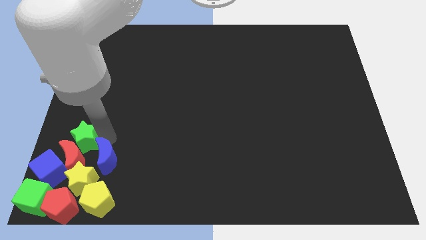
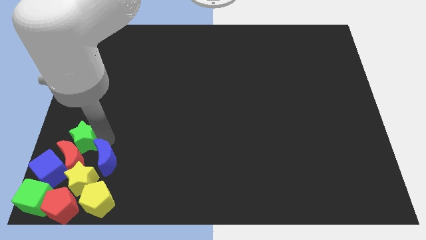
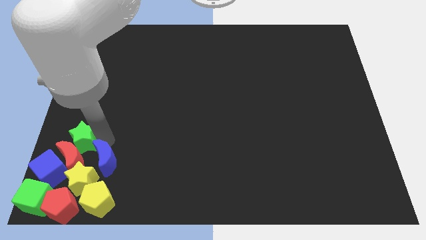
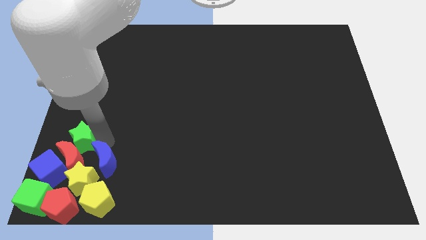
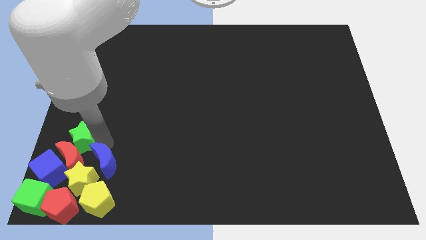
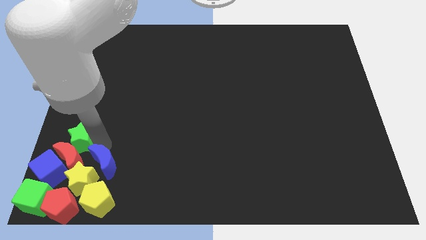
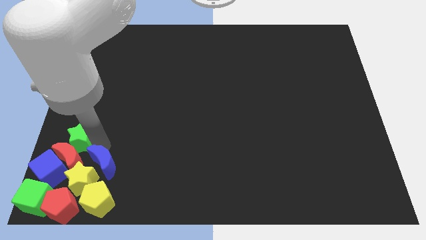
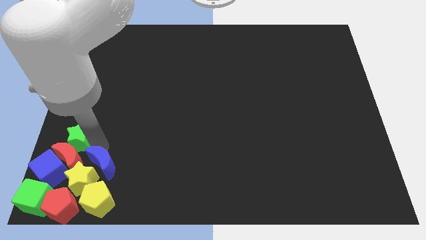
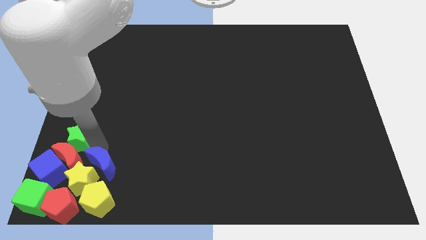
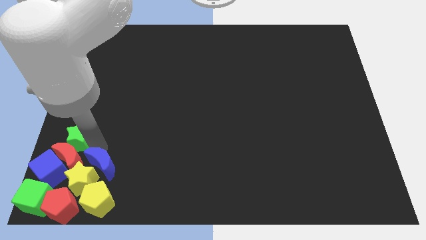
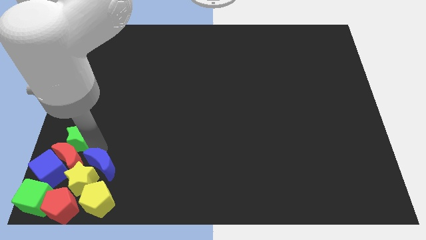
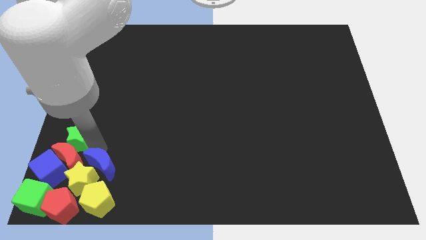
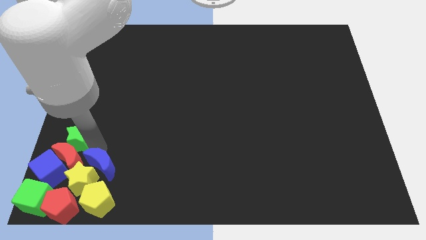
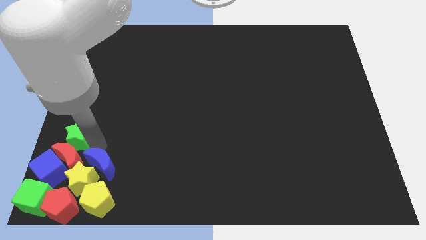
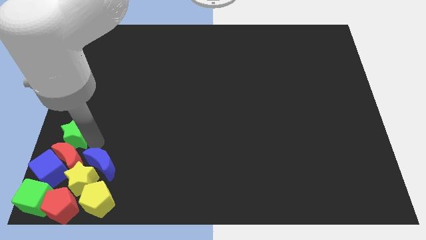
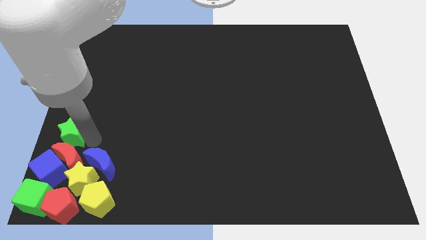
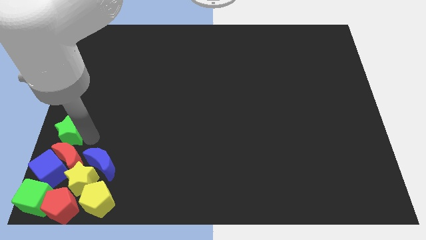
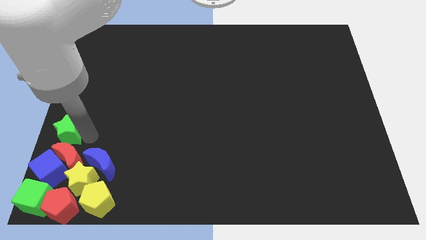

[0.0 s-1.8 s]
place the green star to the top side of the red crescent

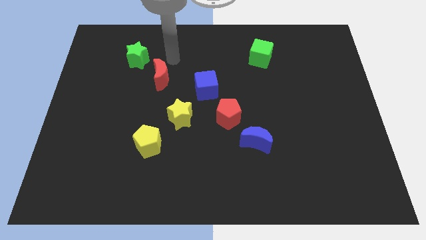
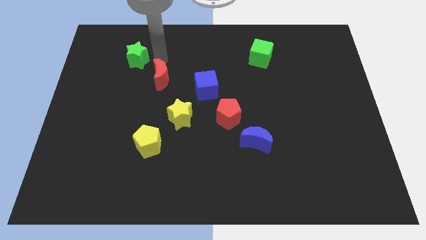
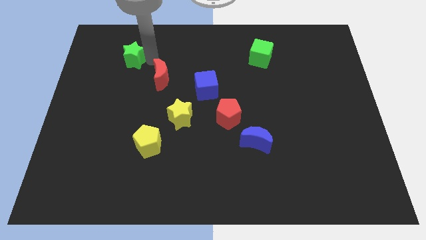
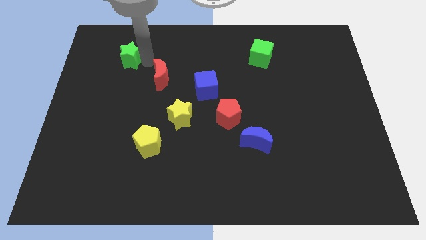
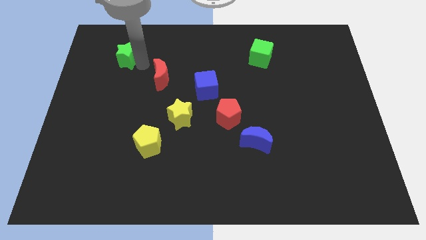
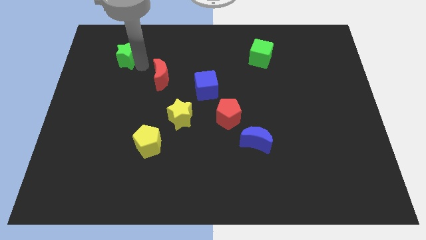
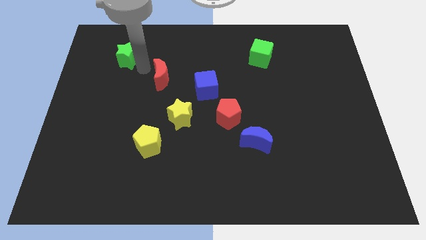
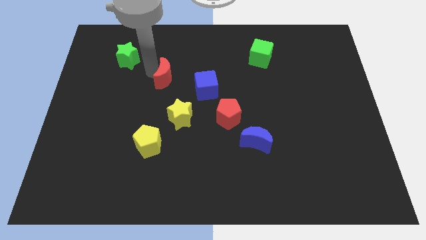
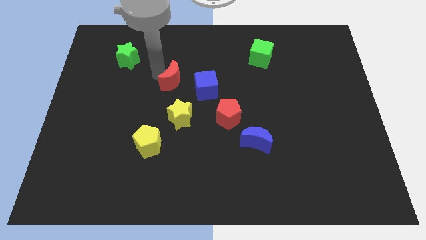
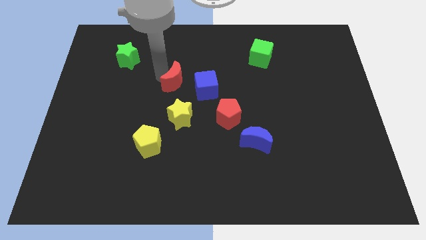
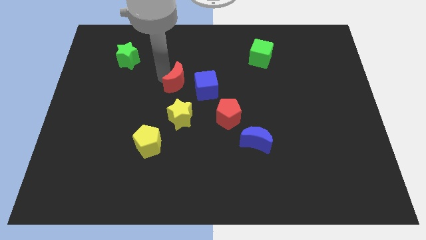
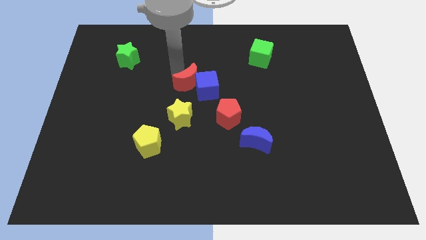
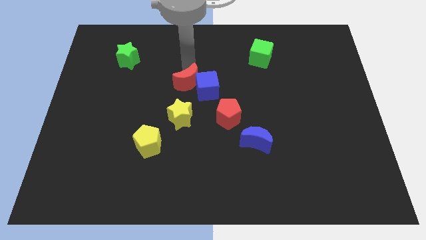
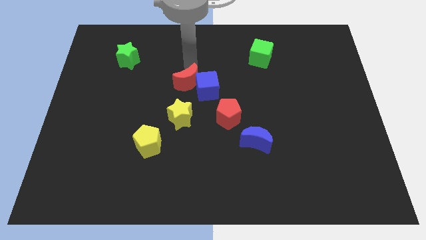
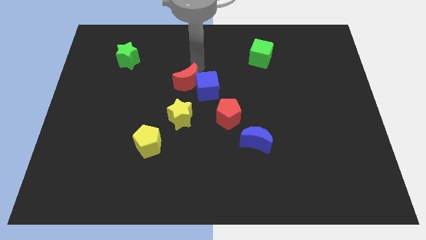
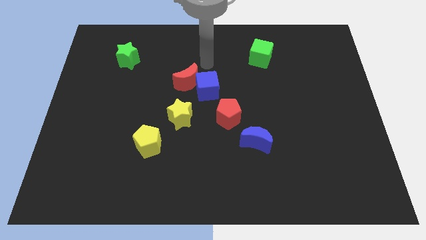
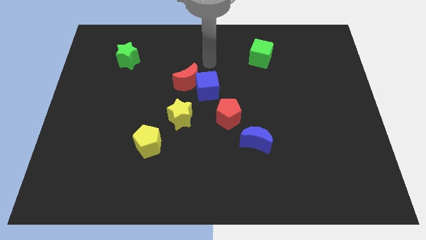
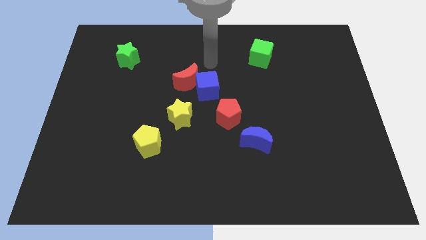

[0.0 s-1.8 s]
move the red moon towards the blue cube

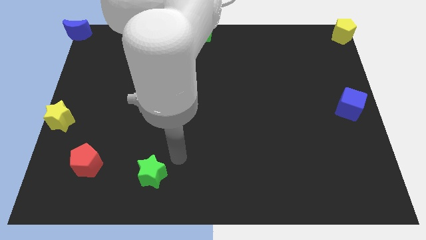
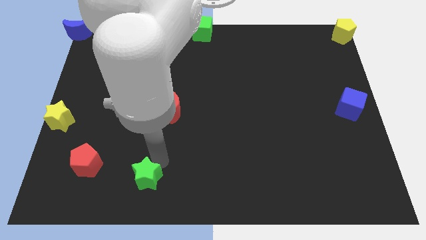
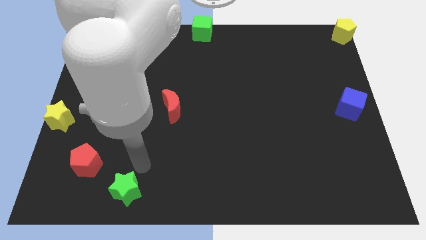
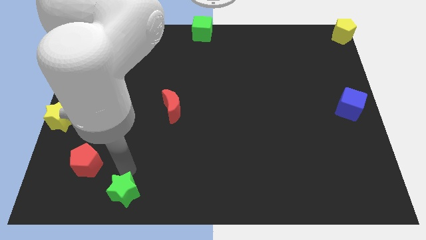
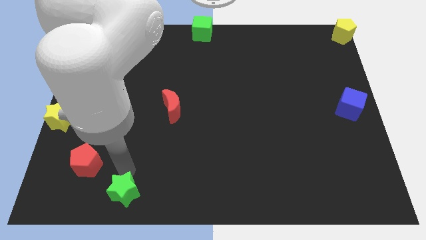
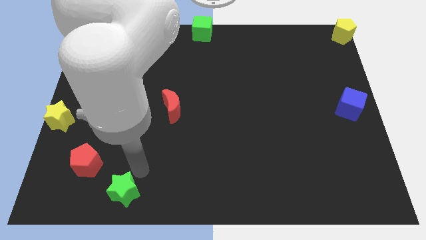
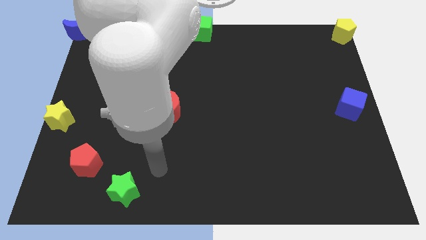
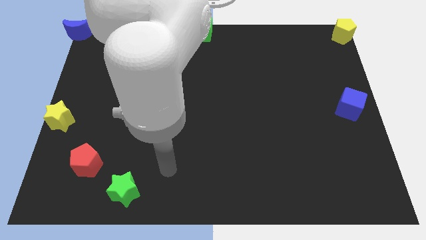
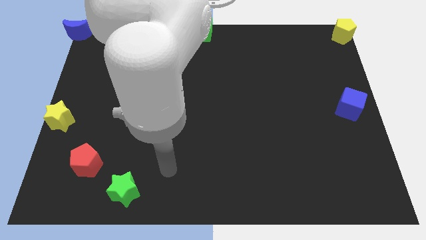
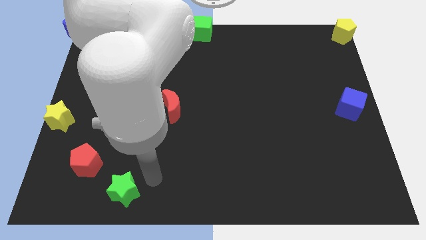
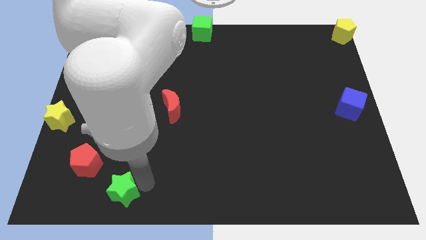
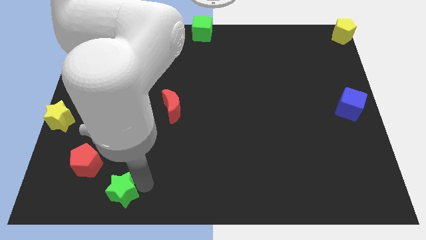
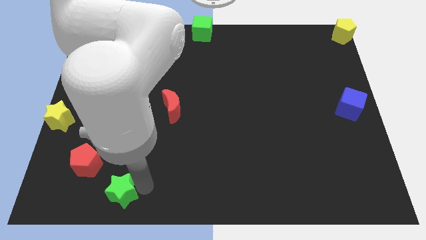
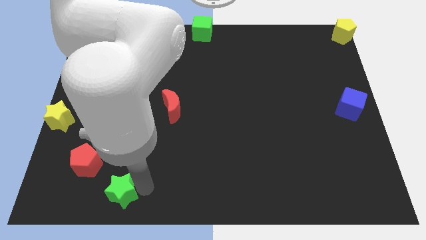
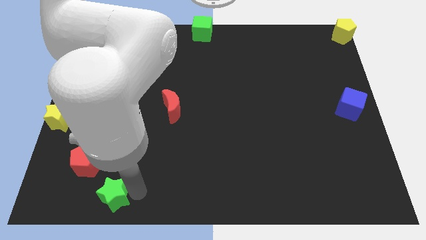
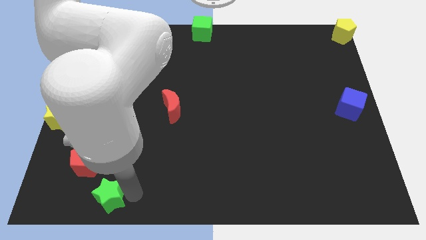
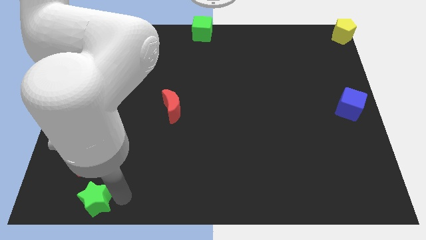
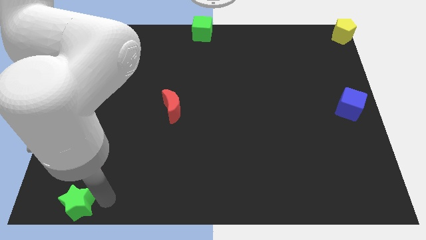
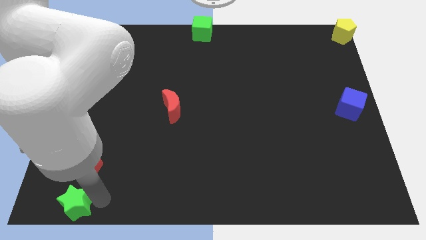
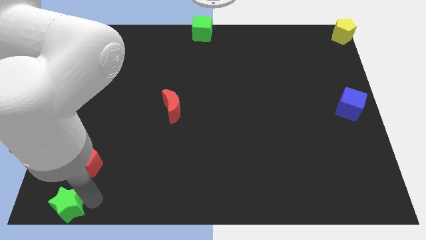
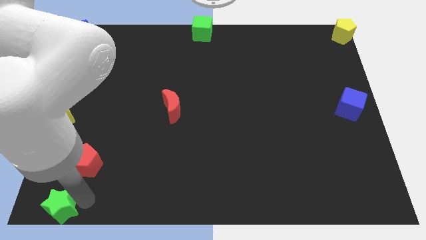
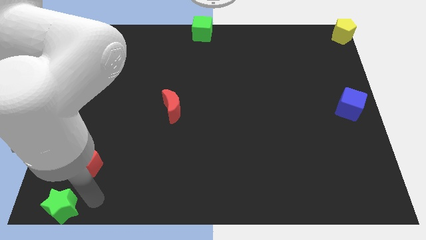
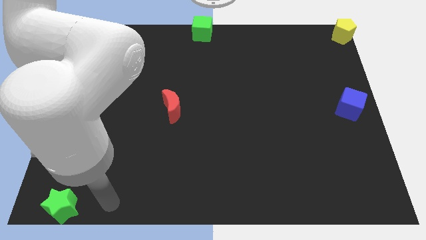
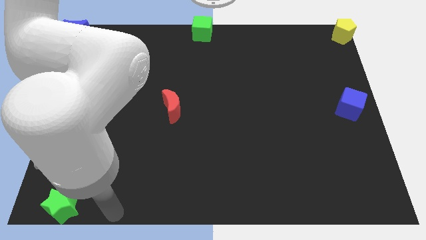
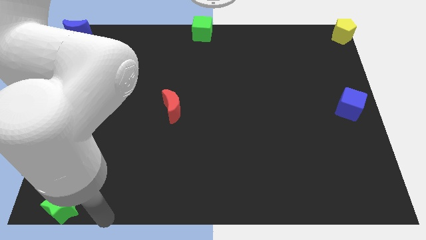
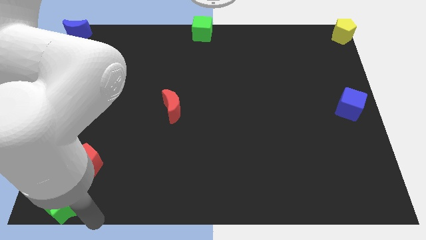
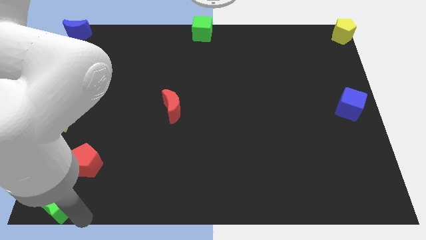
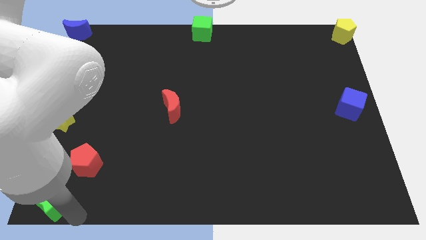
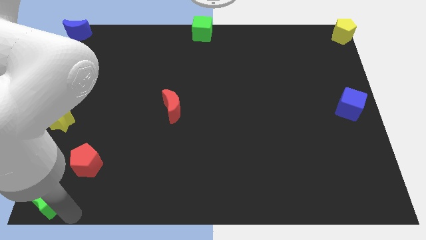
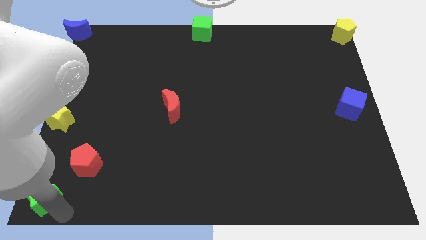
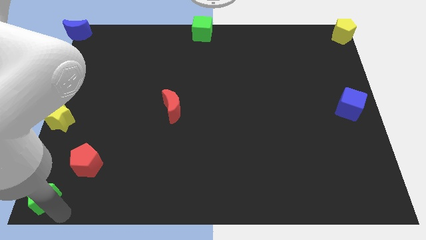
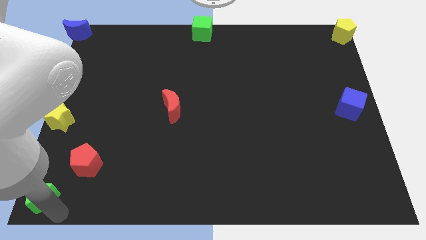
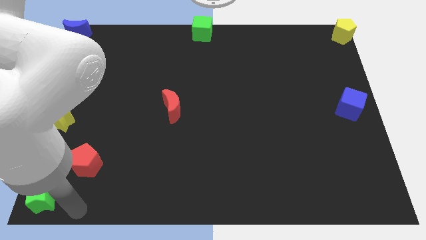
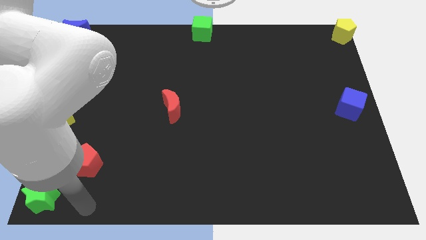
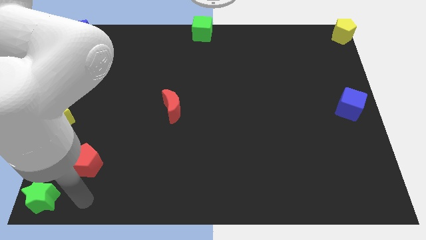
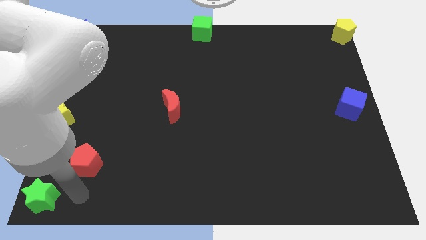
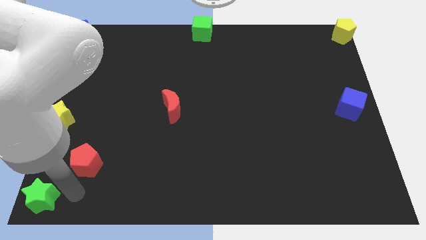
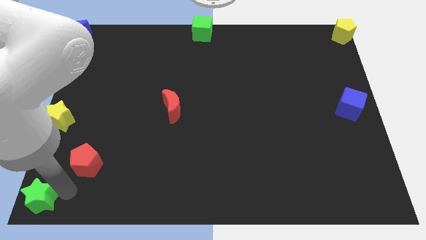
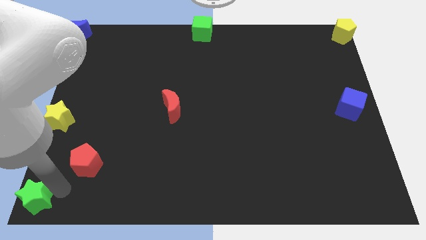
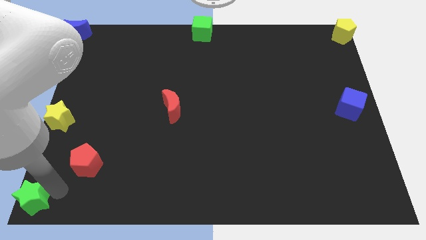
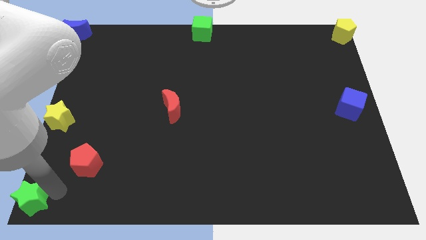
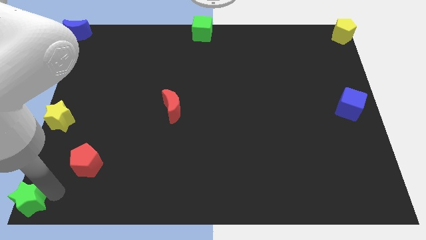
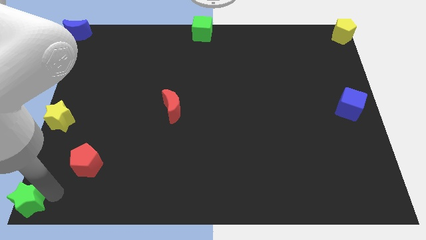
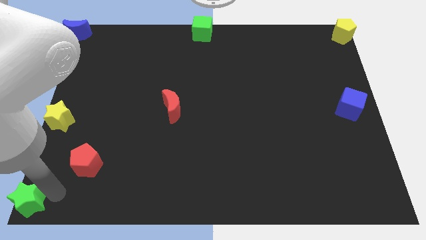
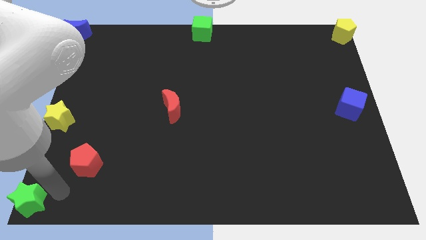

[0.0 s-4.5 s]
move the green star to the bottom left to the board

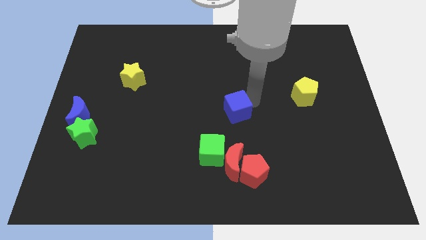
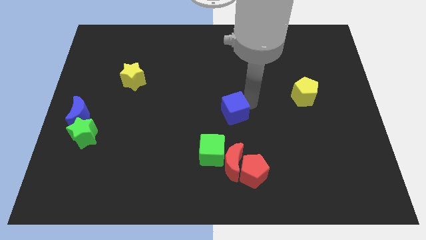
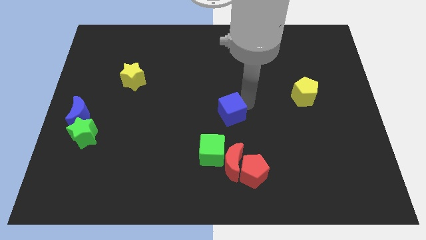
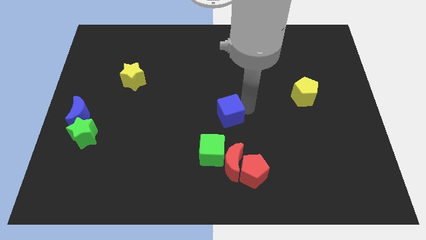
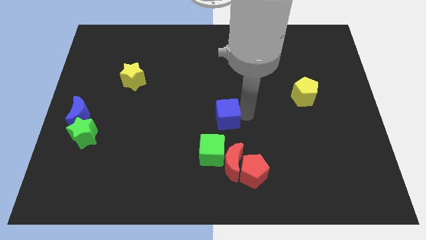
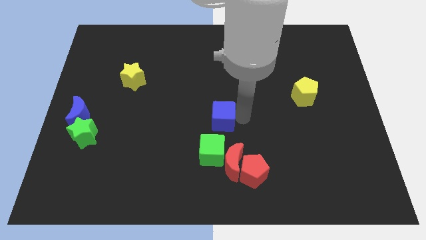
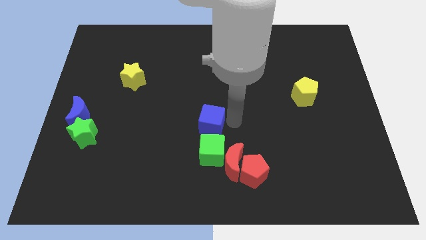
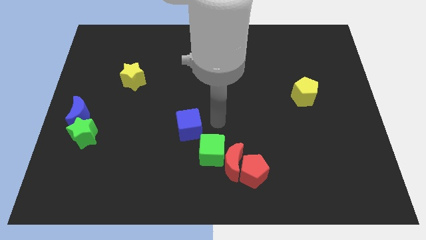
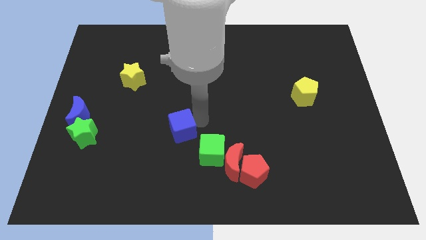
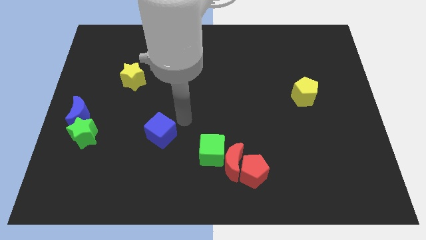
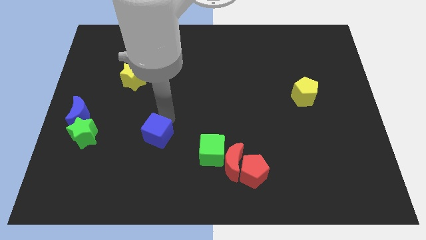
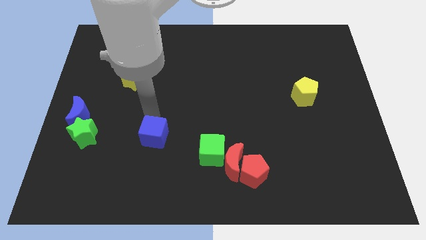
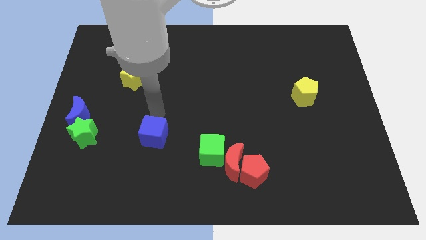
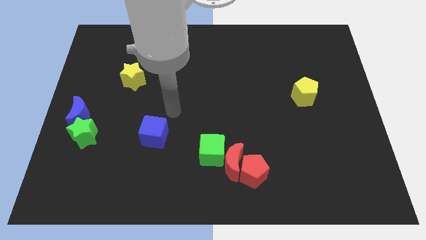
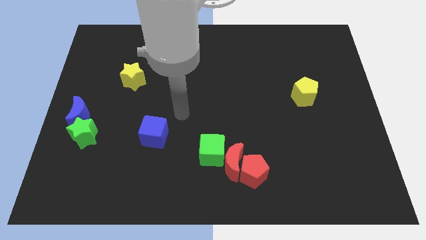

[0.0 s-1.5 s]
place the blue cube in between the green star and the green cube
